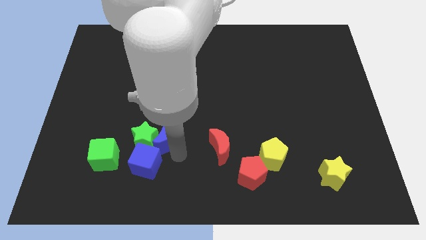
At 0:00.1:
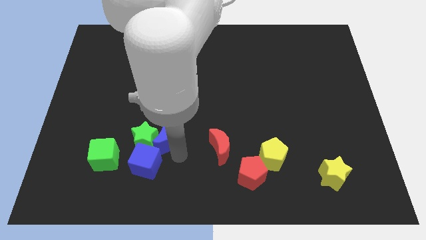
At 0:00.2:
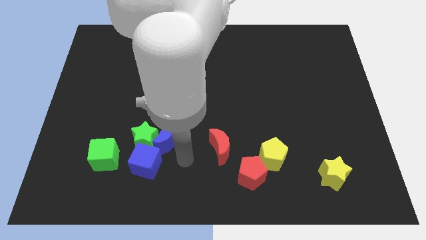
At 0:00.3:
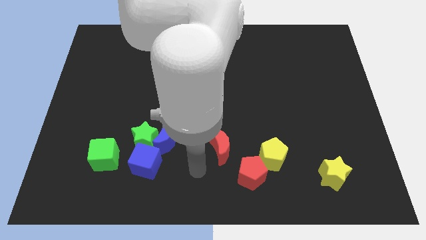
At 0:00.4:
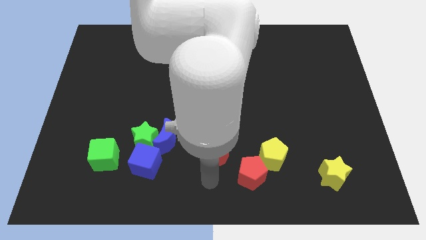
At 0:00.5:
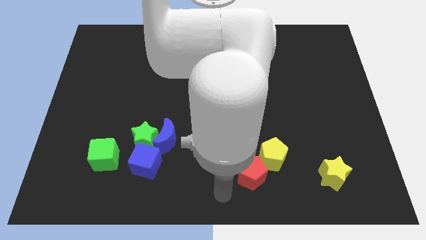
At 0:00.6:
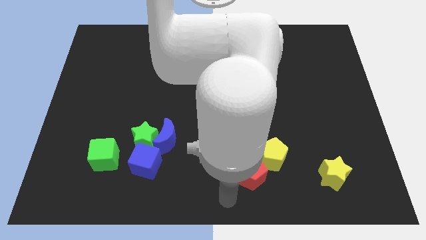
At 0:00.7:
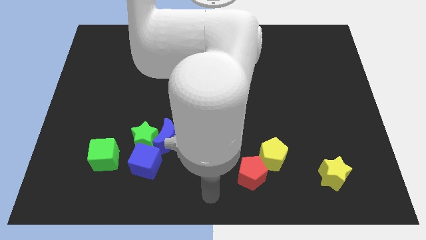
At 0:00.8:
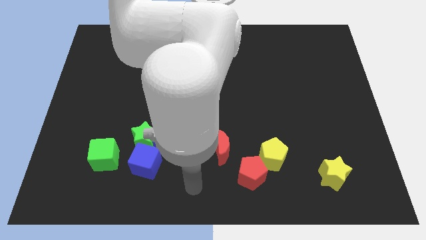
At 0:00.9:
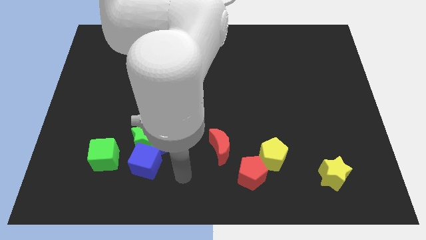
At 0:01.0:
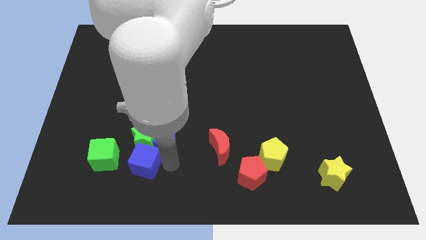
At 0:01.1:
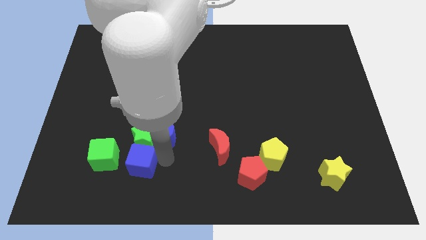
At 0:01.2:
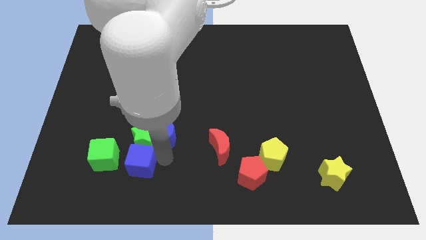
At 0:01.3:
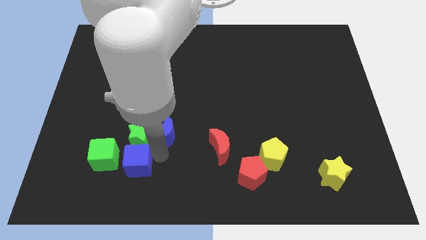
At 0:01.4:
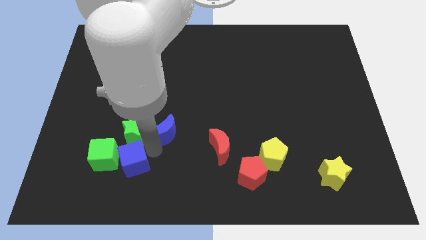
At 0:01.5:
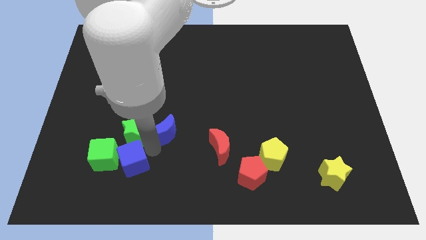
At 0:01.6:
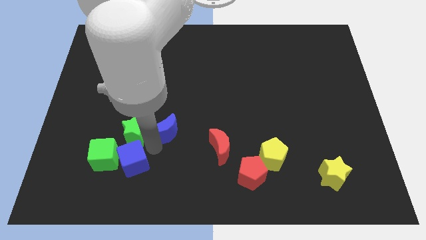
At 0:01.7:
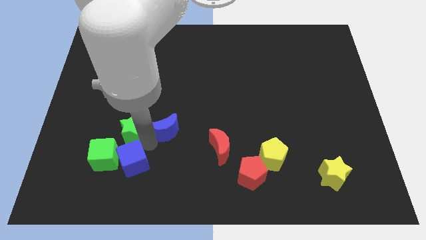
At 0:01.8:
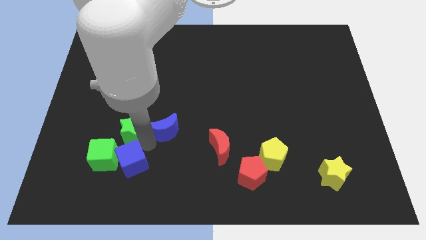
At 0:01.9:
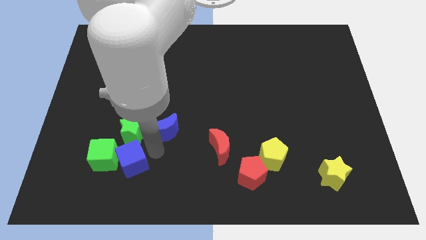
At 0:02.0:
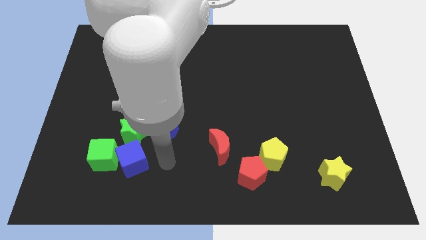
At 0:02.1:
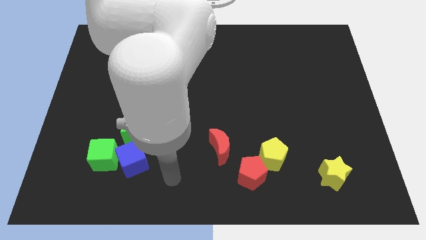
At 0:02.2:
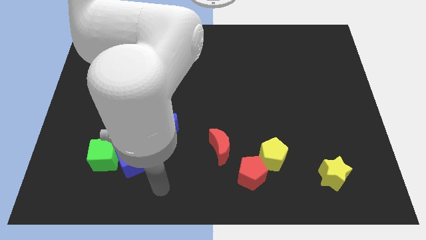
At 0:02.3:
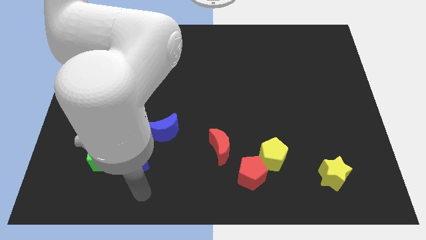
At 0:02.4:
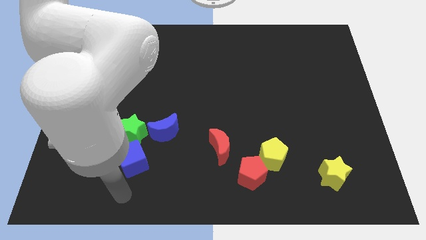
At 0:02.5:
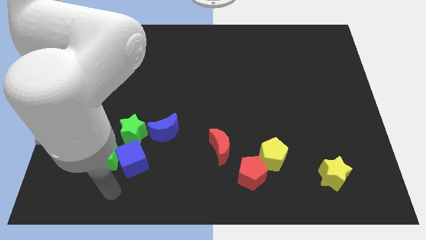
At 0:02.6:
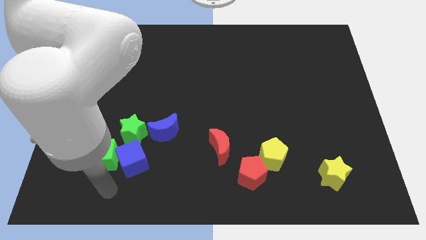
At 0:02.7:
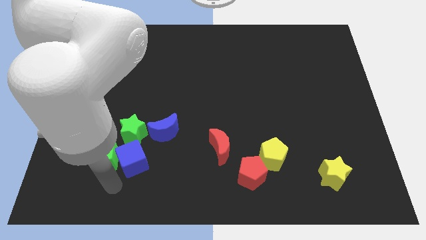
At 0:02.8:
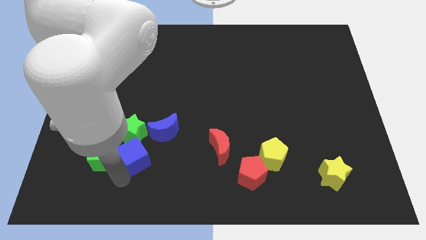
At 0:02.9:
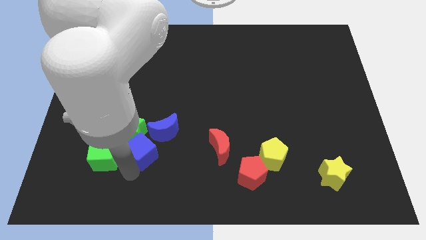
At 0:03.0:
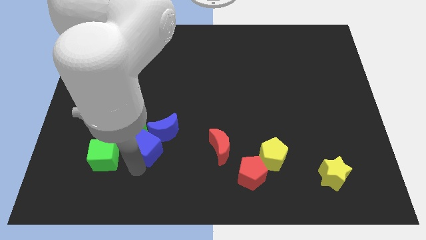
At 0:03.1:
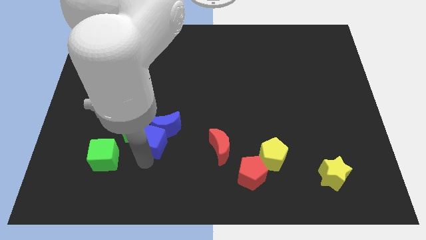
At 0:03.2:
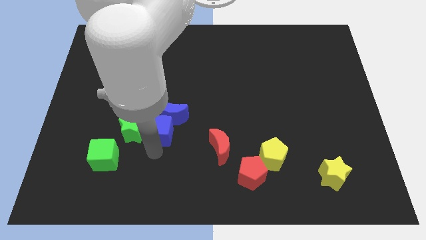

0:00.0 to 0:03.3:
push the blue cube into the blue crescent

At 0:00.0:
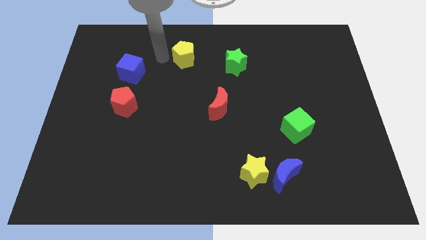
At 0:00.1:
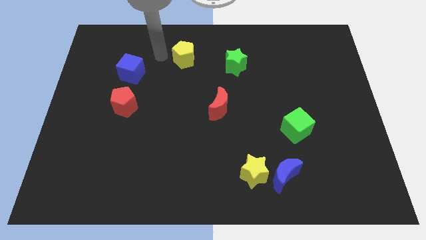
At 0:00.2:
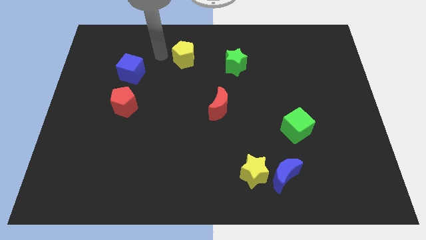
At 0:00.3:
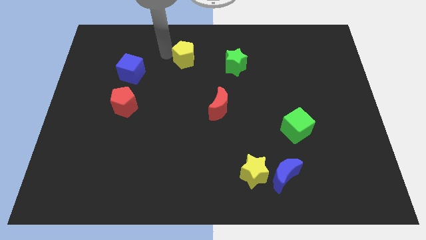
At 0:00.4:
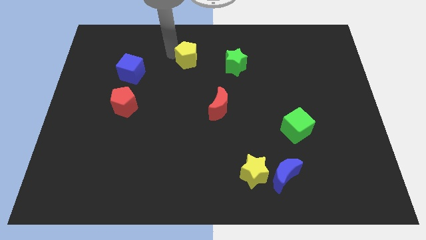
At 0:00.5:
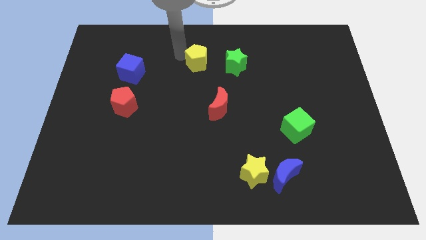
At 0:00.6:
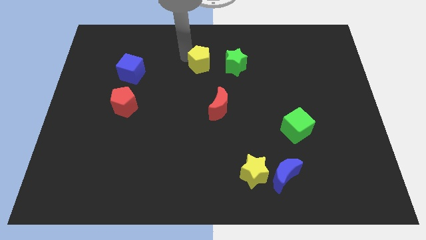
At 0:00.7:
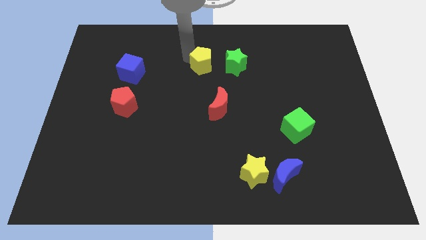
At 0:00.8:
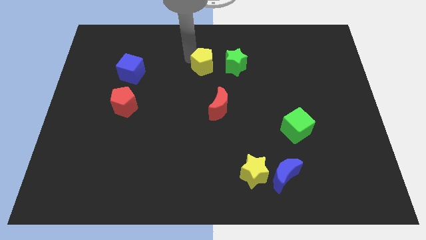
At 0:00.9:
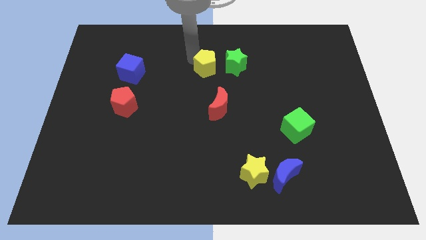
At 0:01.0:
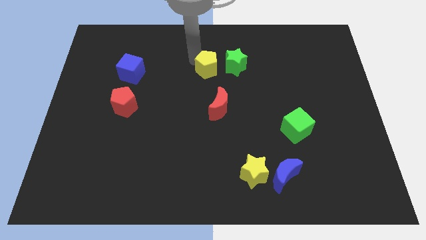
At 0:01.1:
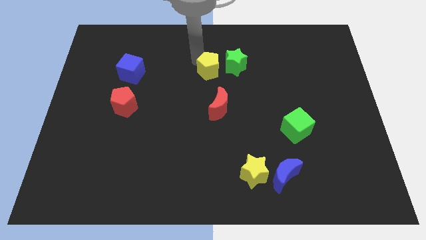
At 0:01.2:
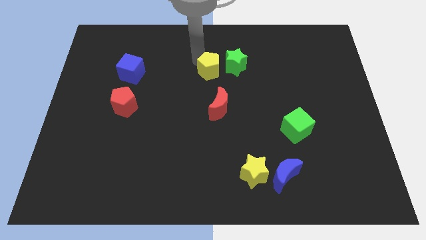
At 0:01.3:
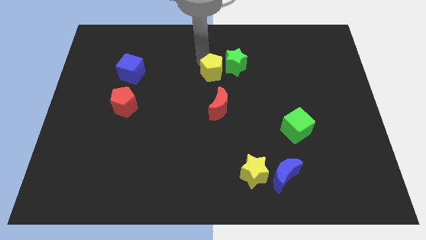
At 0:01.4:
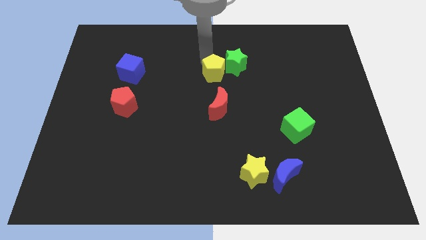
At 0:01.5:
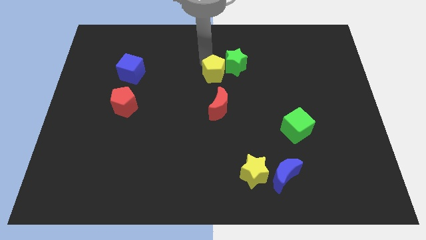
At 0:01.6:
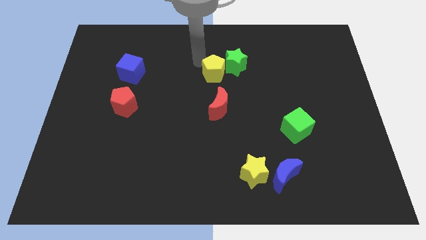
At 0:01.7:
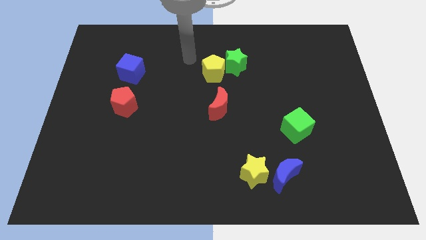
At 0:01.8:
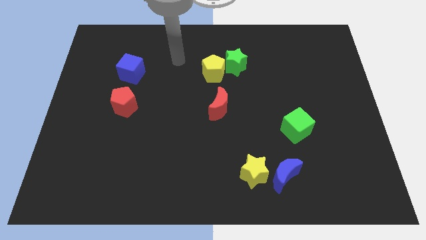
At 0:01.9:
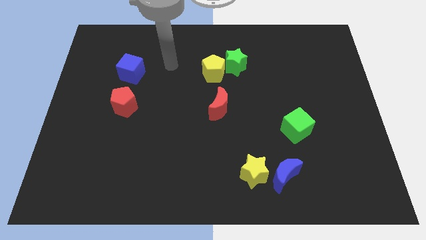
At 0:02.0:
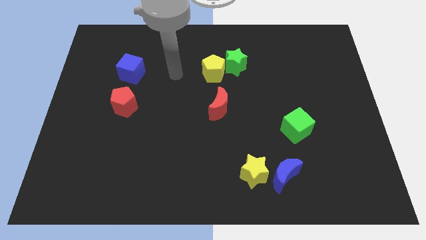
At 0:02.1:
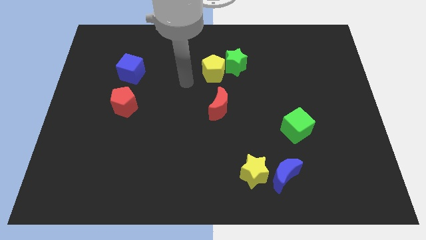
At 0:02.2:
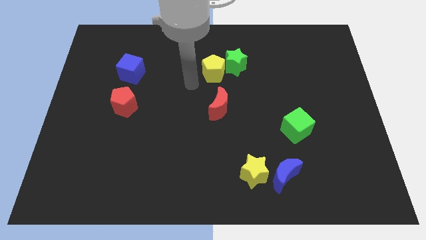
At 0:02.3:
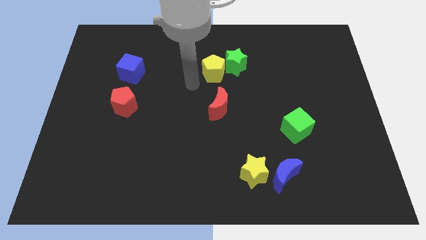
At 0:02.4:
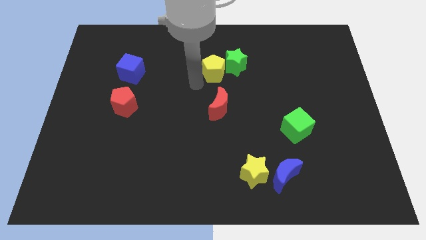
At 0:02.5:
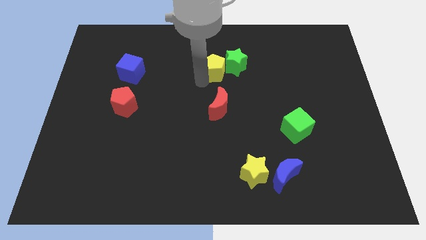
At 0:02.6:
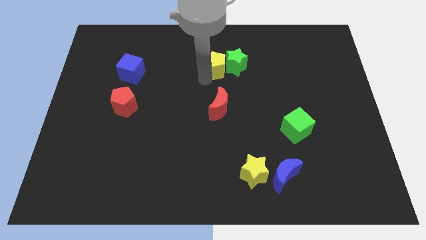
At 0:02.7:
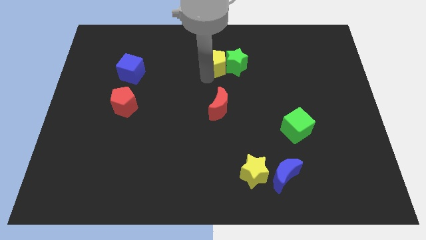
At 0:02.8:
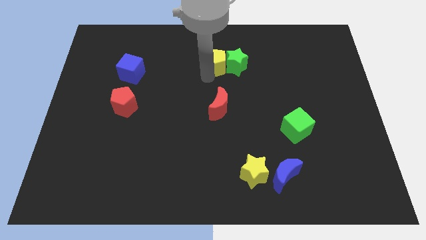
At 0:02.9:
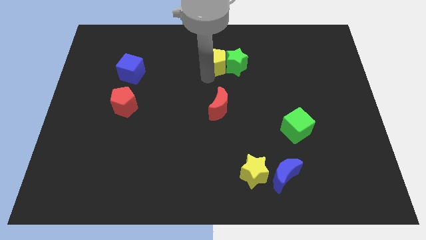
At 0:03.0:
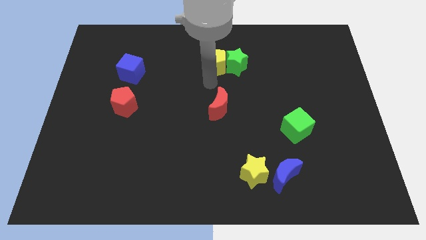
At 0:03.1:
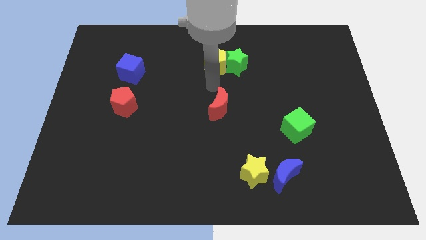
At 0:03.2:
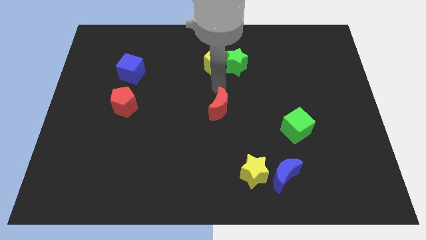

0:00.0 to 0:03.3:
push yellow pentagon in to green star

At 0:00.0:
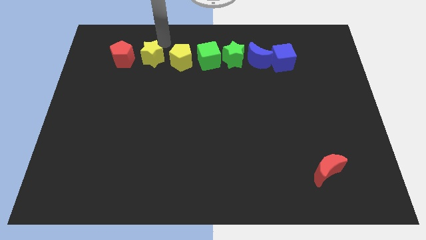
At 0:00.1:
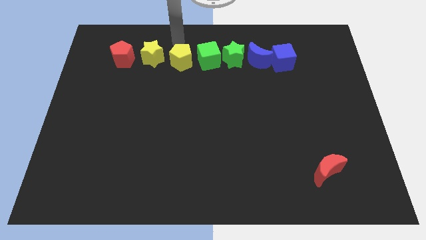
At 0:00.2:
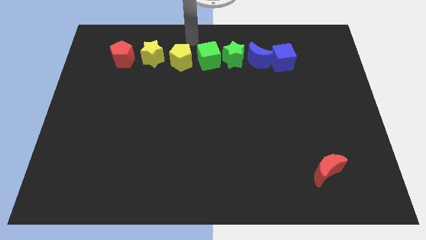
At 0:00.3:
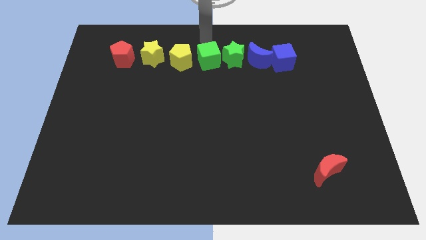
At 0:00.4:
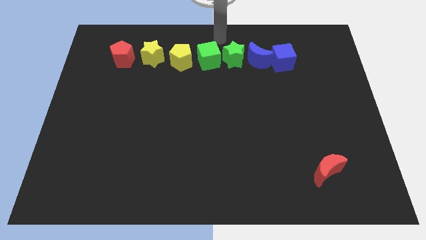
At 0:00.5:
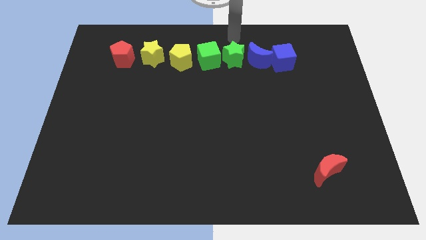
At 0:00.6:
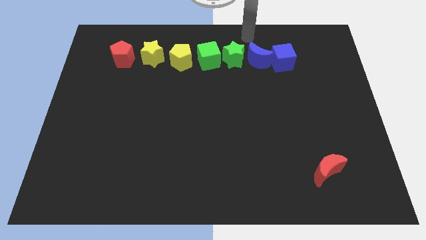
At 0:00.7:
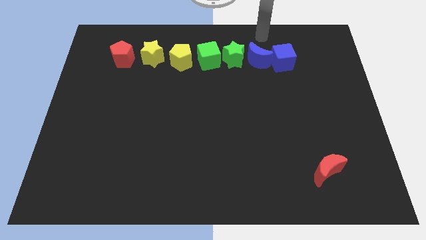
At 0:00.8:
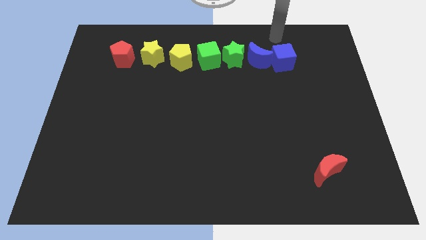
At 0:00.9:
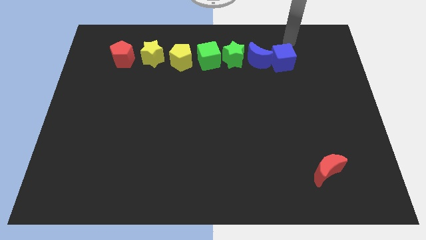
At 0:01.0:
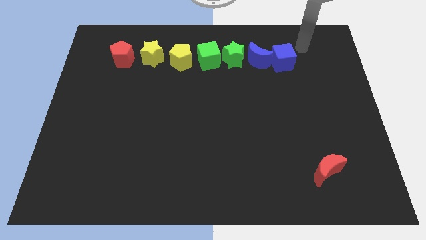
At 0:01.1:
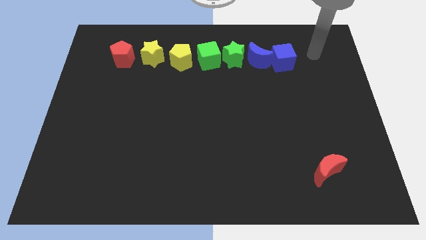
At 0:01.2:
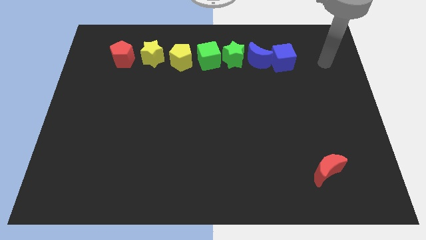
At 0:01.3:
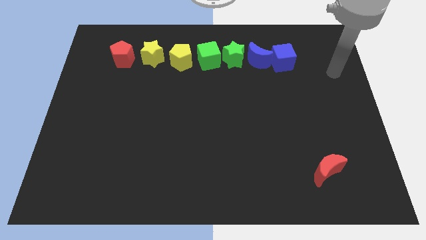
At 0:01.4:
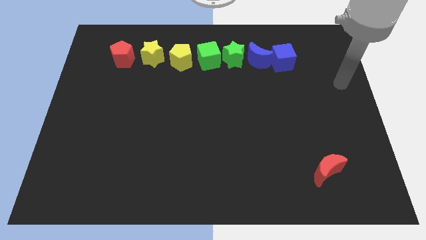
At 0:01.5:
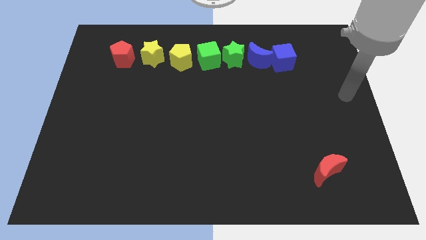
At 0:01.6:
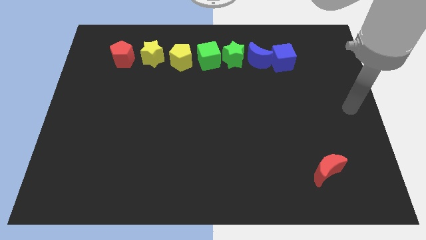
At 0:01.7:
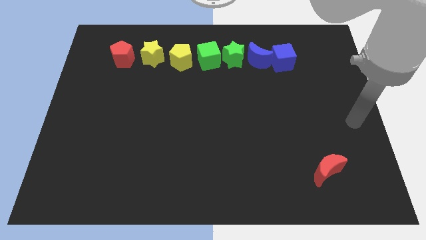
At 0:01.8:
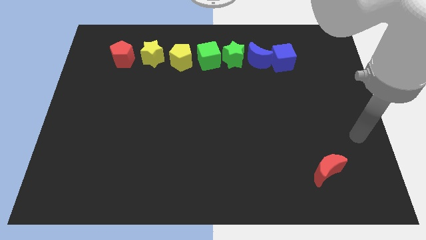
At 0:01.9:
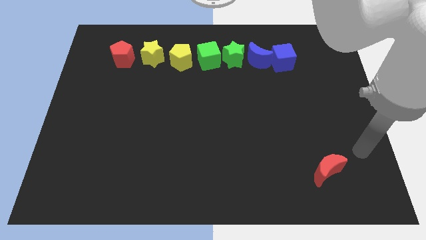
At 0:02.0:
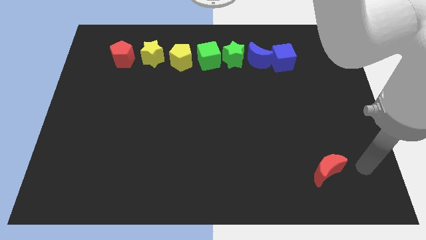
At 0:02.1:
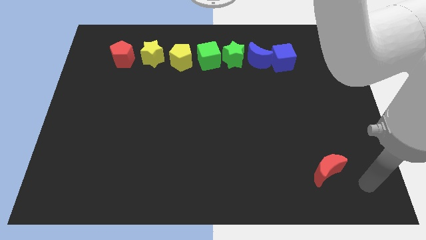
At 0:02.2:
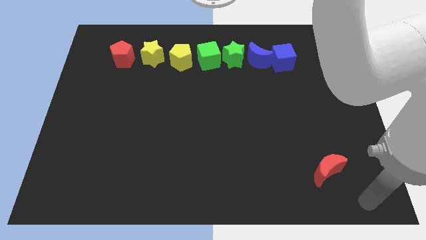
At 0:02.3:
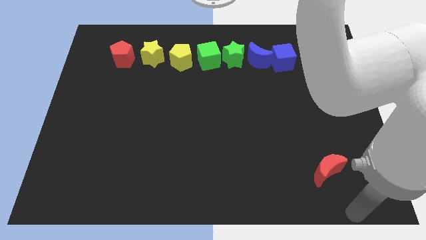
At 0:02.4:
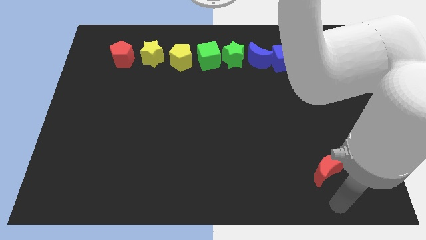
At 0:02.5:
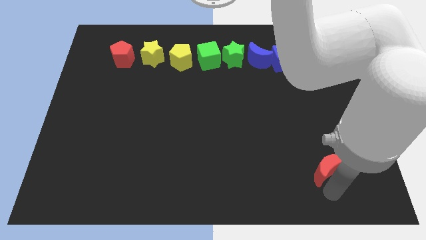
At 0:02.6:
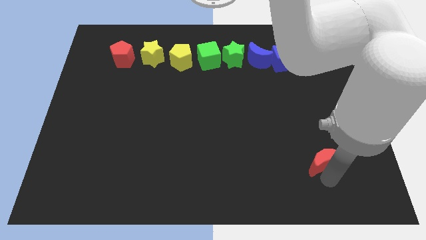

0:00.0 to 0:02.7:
move your arm towards red moon
